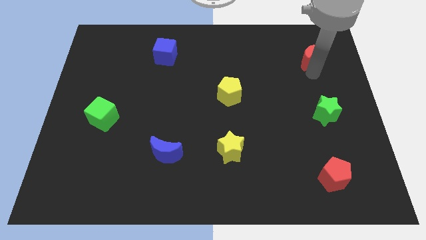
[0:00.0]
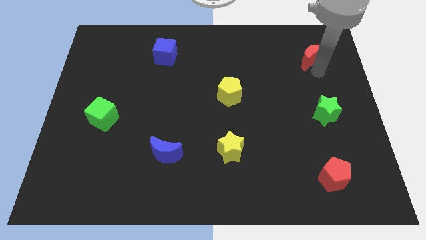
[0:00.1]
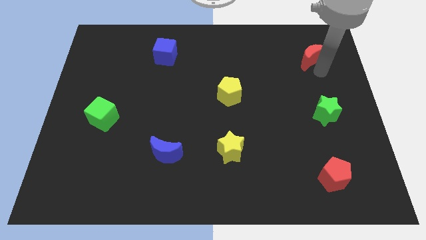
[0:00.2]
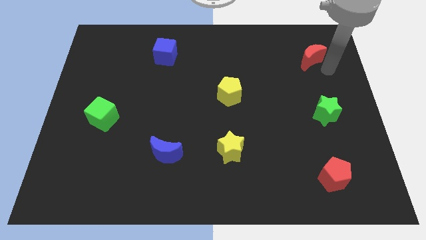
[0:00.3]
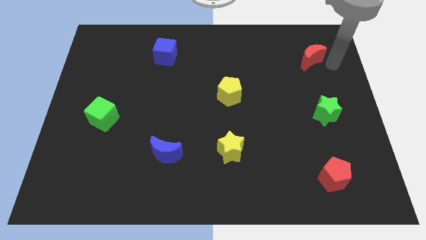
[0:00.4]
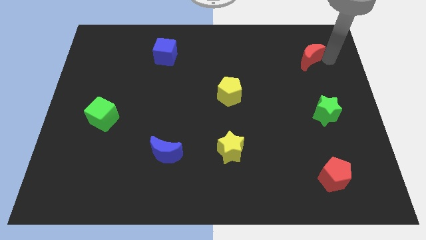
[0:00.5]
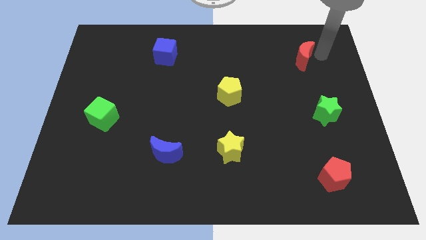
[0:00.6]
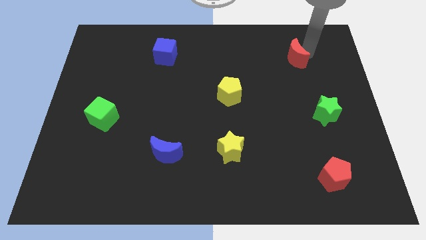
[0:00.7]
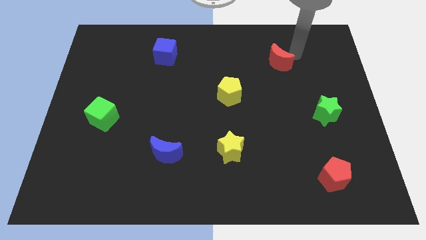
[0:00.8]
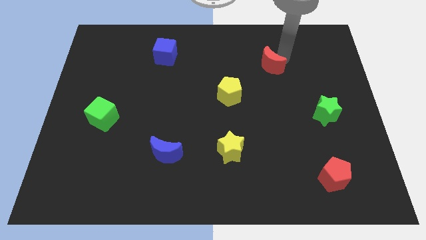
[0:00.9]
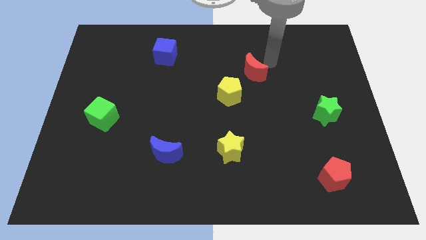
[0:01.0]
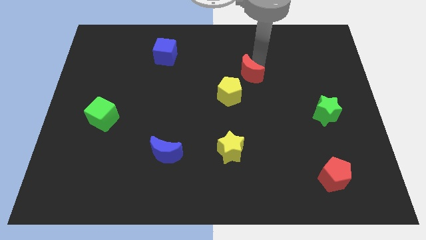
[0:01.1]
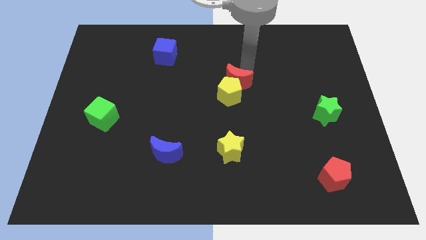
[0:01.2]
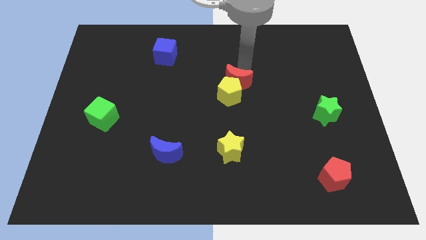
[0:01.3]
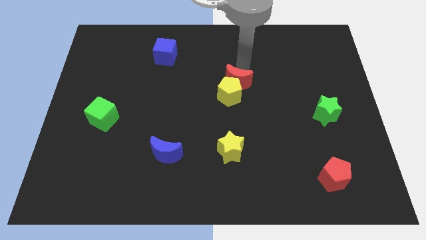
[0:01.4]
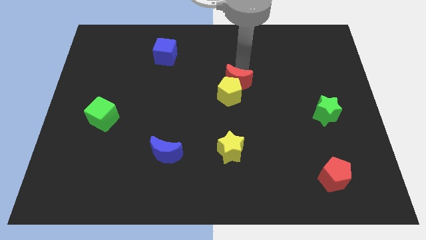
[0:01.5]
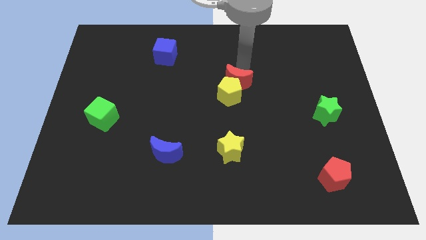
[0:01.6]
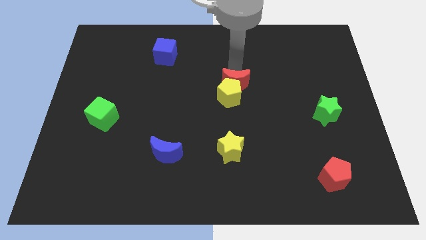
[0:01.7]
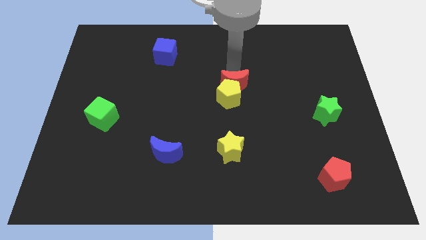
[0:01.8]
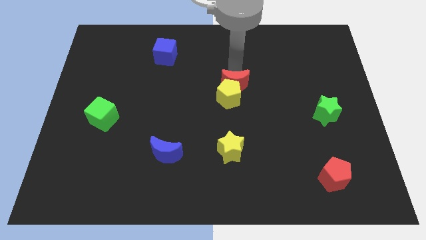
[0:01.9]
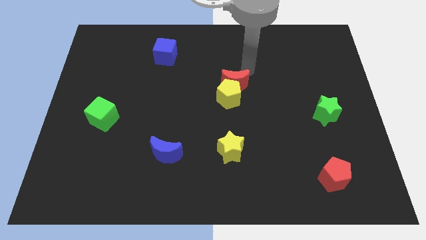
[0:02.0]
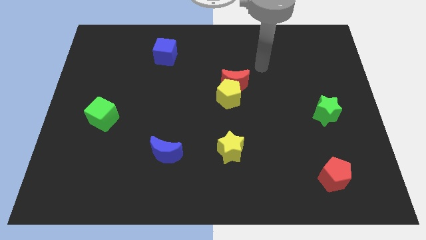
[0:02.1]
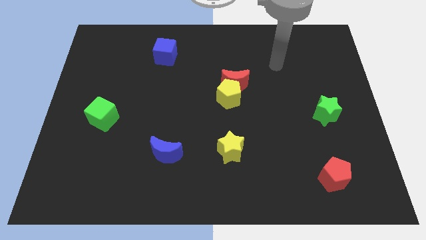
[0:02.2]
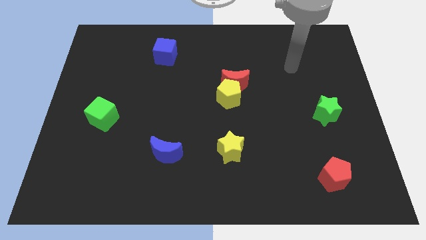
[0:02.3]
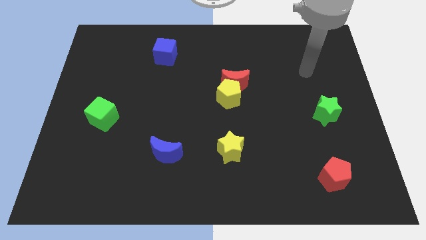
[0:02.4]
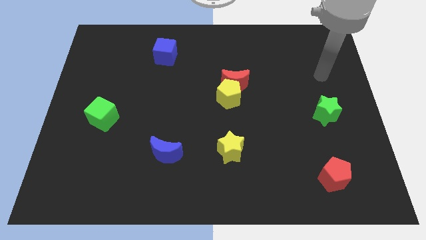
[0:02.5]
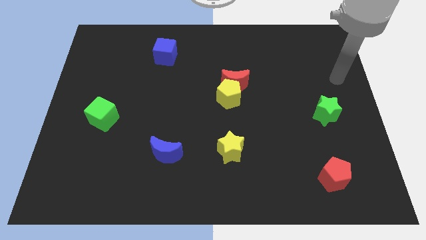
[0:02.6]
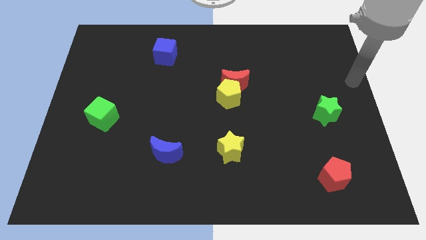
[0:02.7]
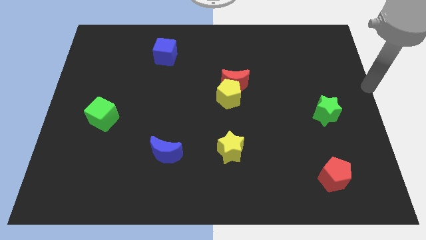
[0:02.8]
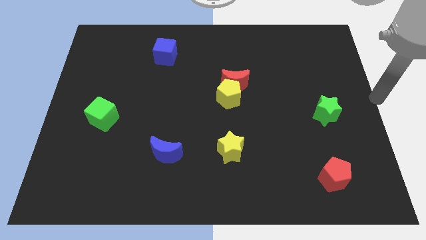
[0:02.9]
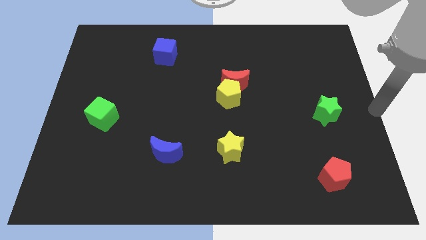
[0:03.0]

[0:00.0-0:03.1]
push the red moon into the yellow pentagon

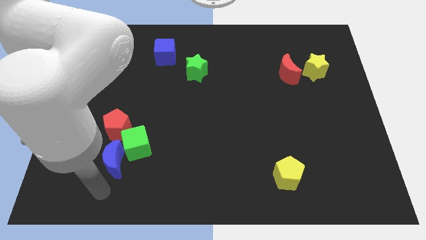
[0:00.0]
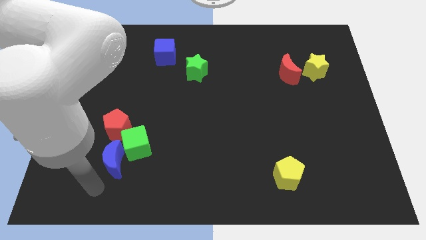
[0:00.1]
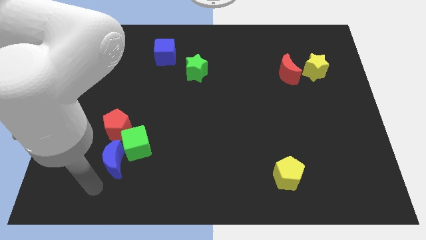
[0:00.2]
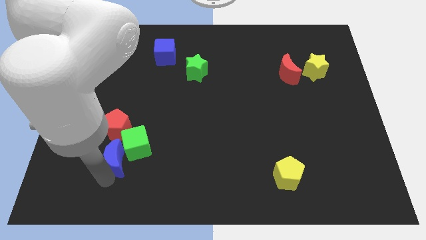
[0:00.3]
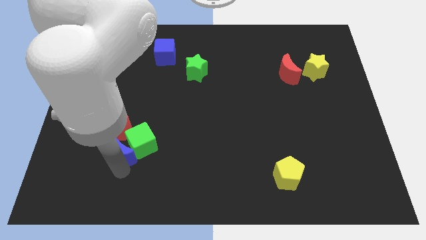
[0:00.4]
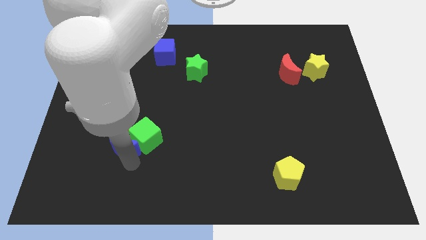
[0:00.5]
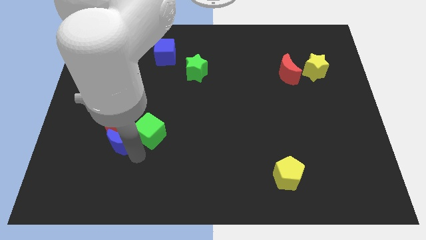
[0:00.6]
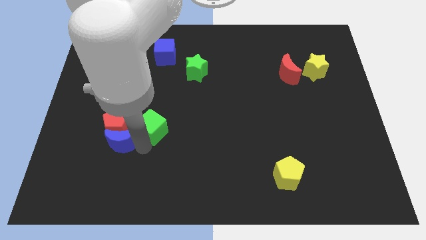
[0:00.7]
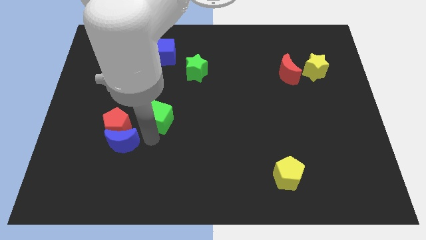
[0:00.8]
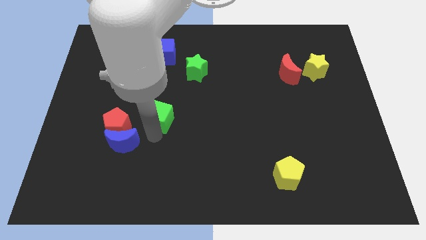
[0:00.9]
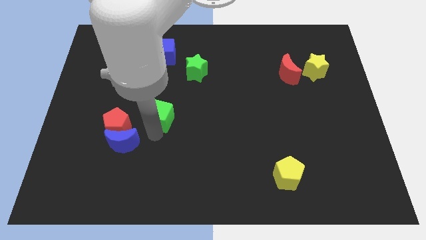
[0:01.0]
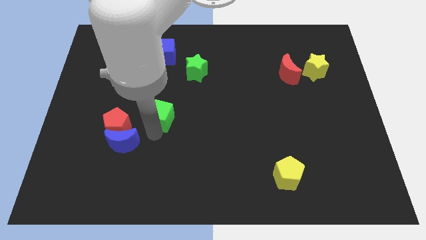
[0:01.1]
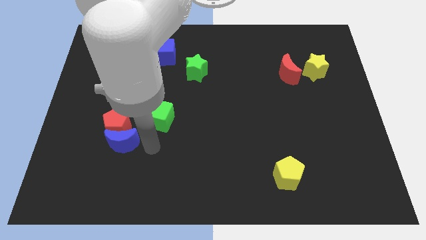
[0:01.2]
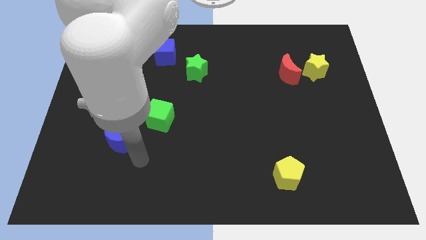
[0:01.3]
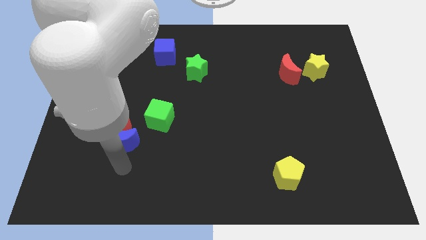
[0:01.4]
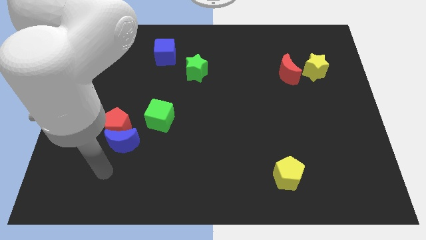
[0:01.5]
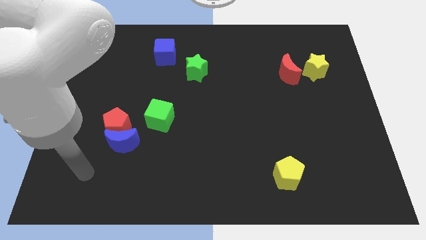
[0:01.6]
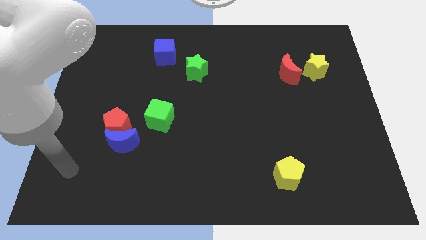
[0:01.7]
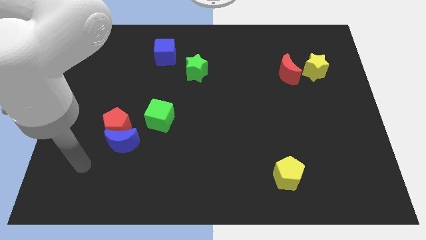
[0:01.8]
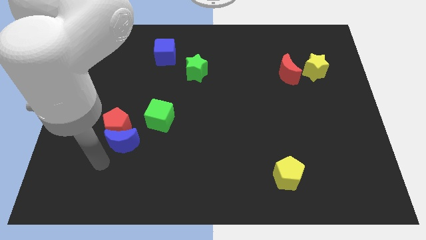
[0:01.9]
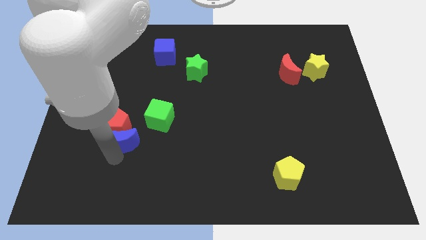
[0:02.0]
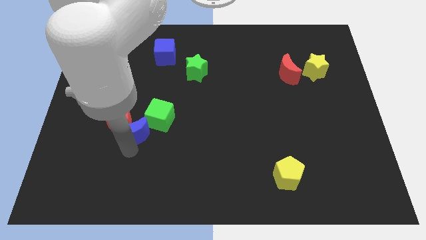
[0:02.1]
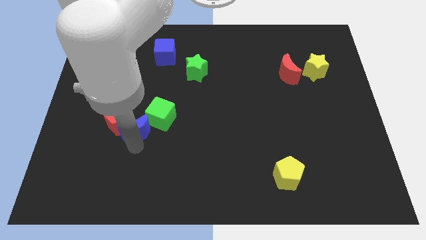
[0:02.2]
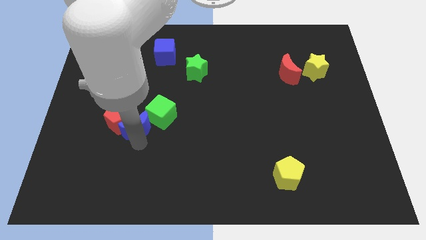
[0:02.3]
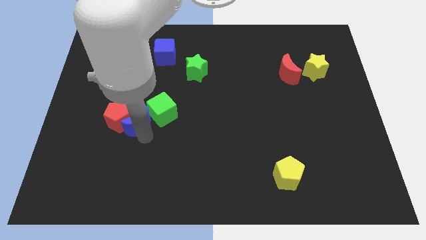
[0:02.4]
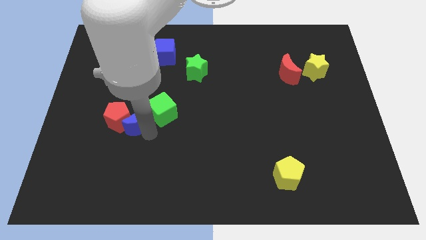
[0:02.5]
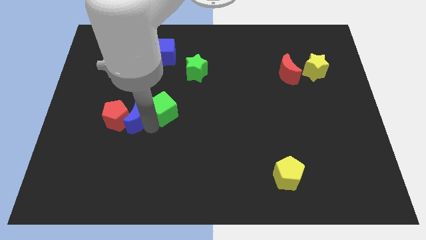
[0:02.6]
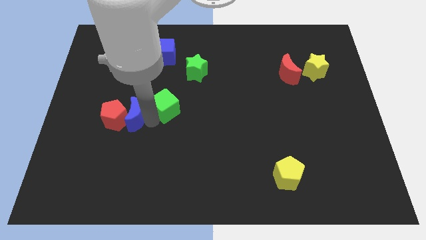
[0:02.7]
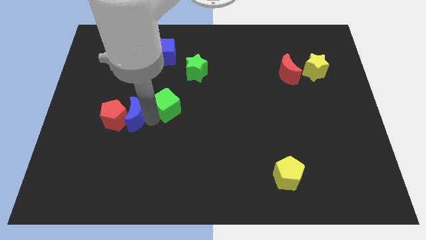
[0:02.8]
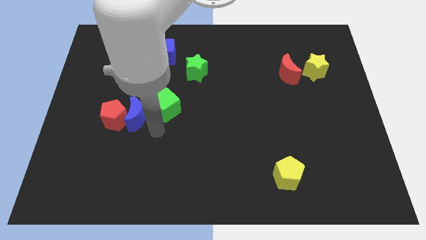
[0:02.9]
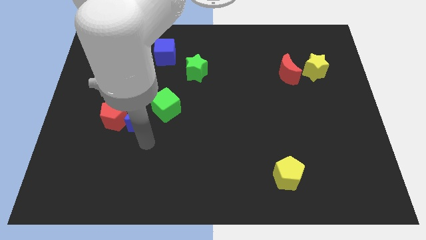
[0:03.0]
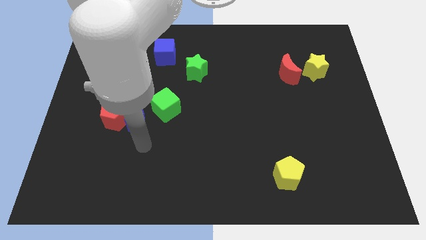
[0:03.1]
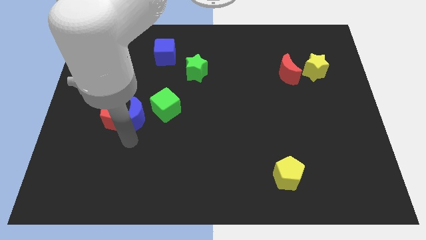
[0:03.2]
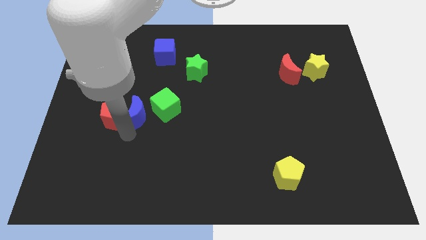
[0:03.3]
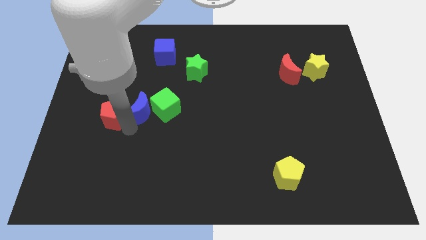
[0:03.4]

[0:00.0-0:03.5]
place blue crescent to the middle of red pentagon and green cube

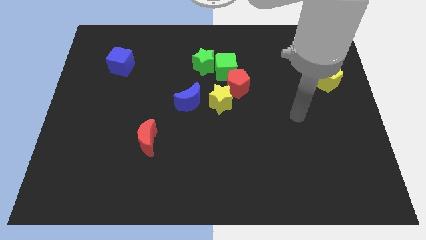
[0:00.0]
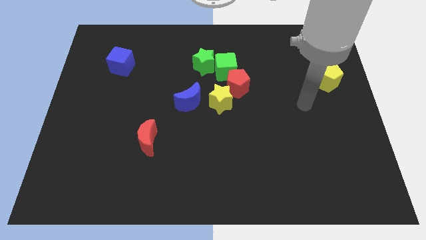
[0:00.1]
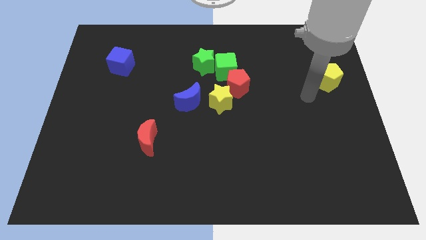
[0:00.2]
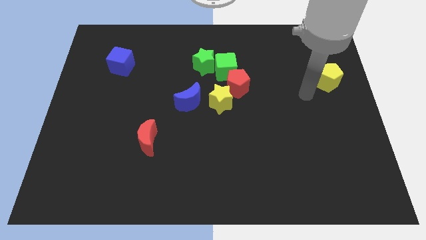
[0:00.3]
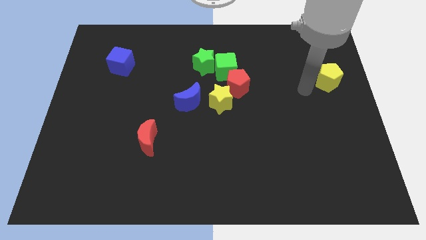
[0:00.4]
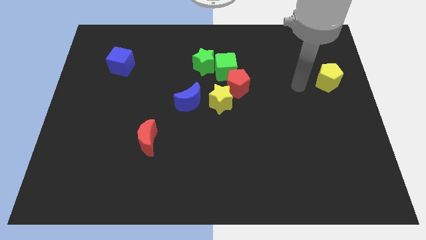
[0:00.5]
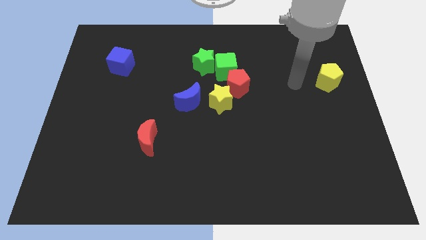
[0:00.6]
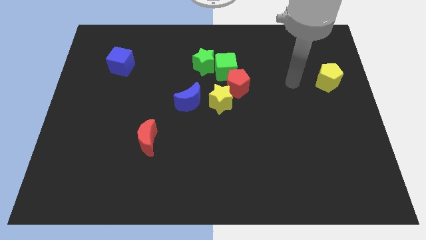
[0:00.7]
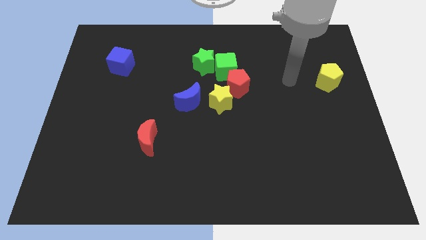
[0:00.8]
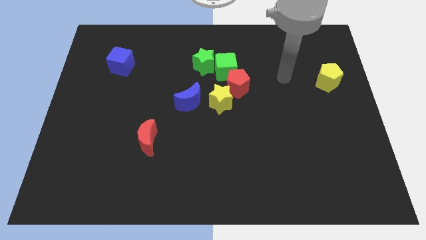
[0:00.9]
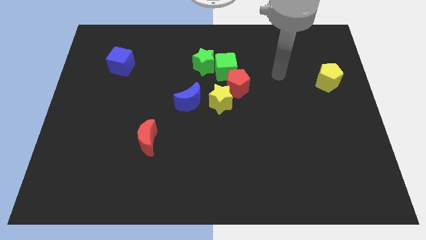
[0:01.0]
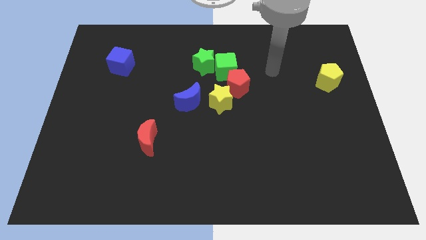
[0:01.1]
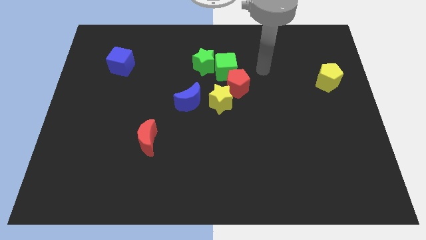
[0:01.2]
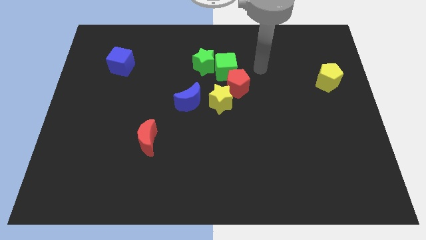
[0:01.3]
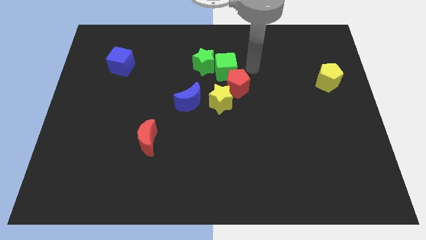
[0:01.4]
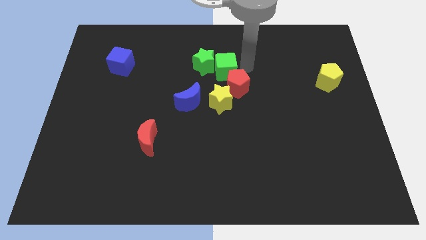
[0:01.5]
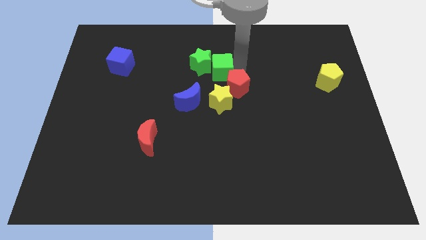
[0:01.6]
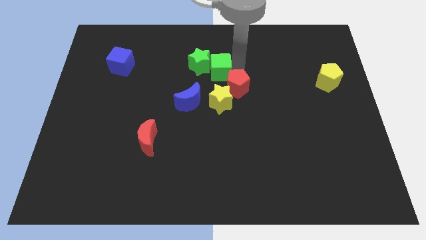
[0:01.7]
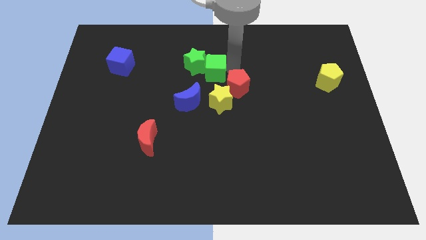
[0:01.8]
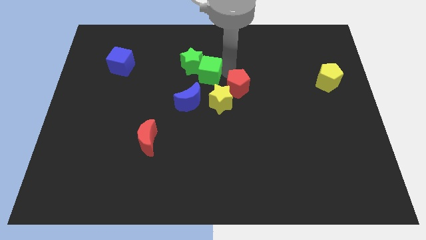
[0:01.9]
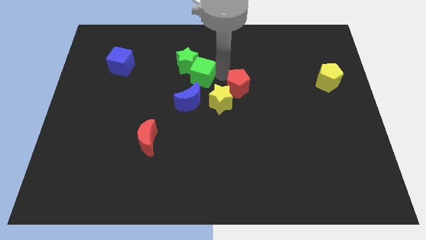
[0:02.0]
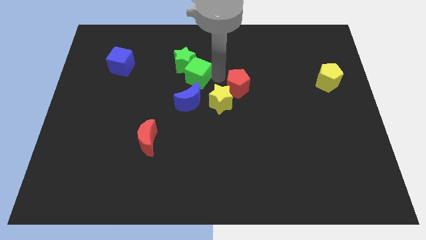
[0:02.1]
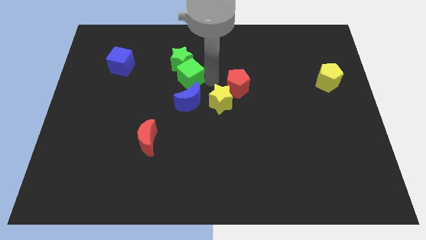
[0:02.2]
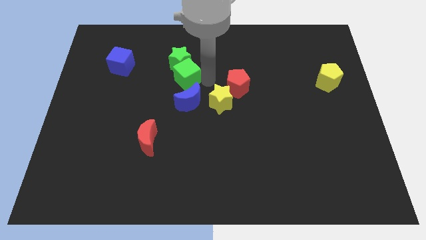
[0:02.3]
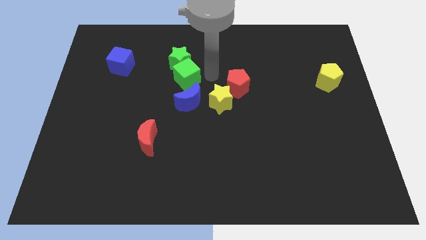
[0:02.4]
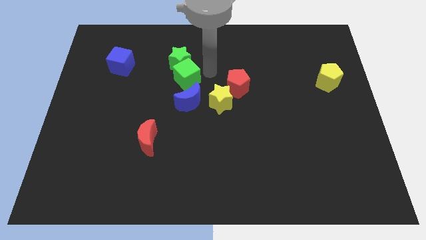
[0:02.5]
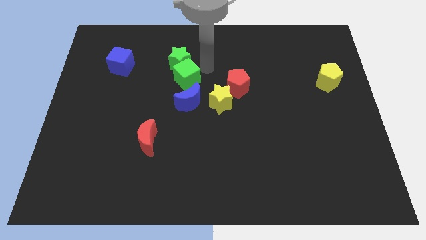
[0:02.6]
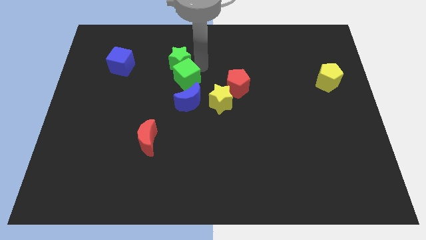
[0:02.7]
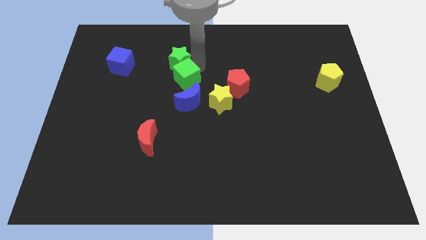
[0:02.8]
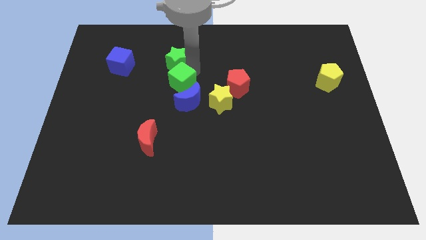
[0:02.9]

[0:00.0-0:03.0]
push the green cube into the green star
